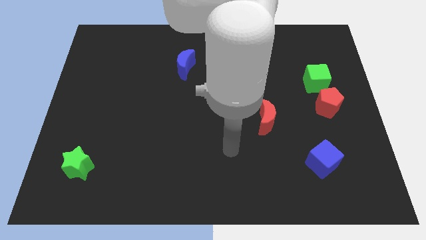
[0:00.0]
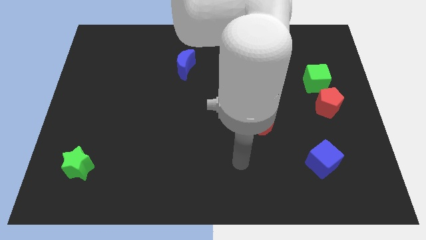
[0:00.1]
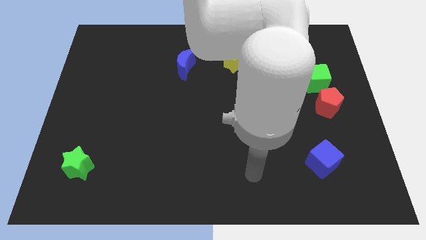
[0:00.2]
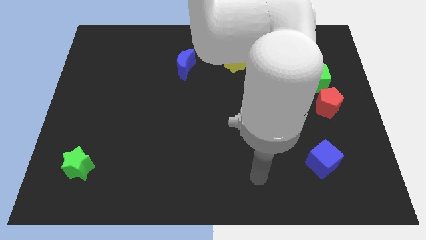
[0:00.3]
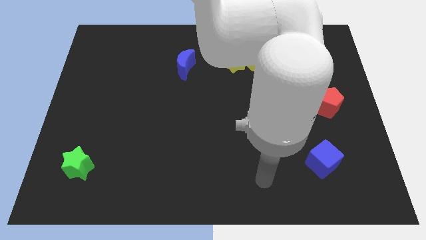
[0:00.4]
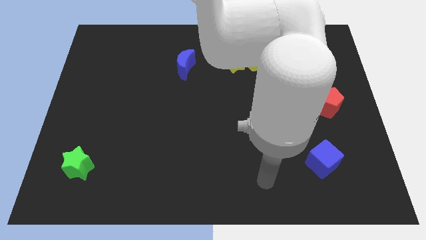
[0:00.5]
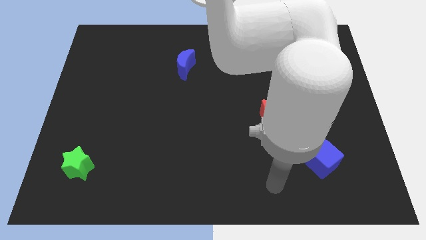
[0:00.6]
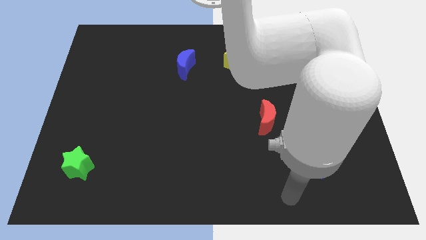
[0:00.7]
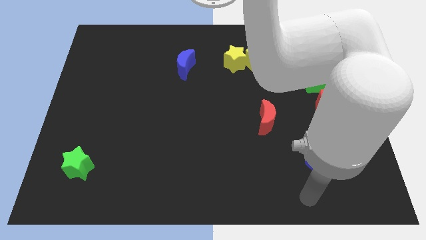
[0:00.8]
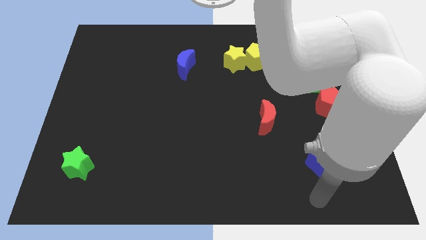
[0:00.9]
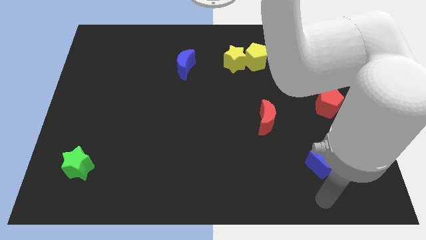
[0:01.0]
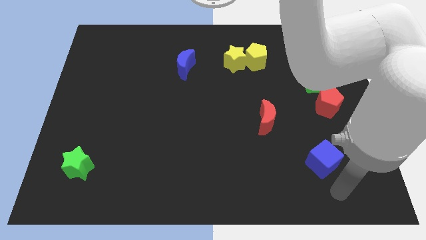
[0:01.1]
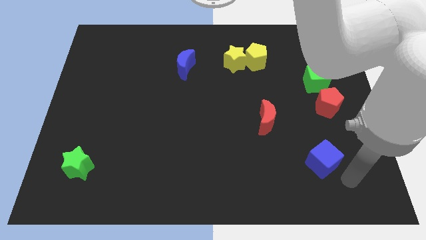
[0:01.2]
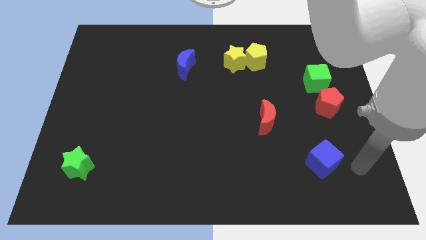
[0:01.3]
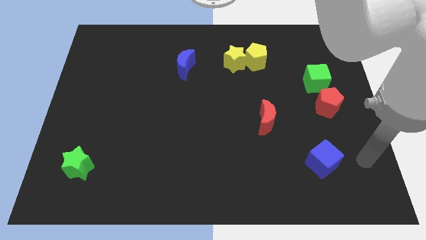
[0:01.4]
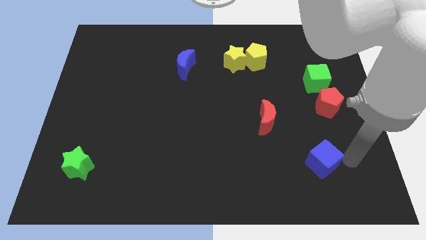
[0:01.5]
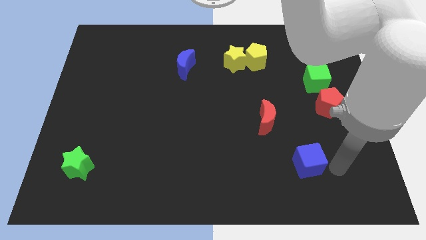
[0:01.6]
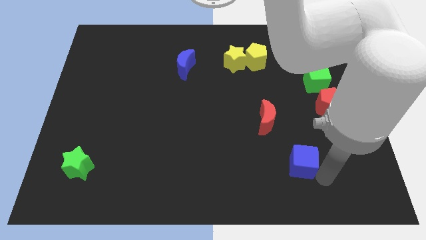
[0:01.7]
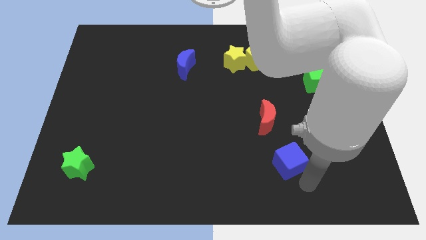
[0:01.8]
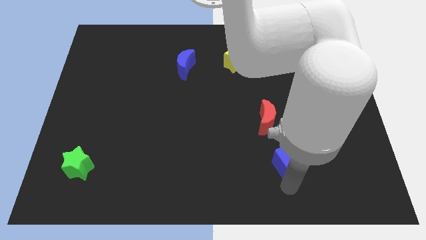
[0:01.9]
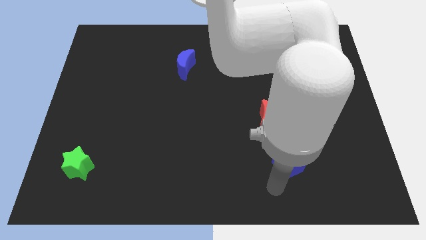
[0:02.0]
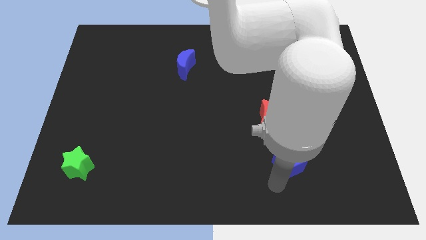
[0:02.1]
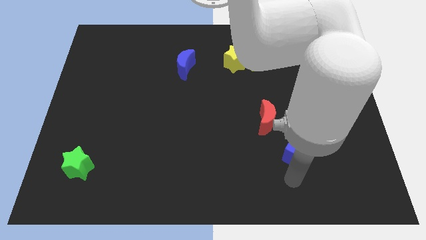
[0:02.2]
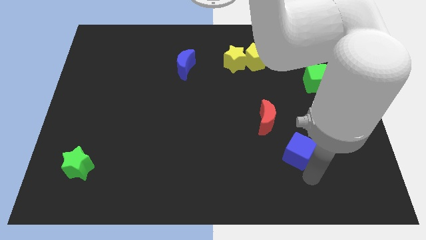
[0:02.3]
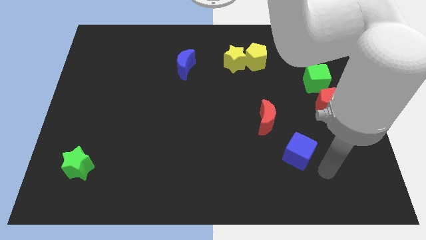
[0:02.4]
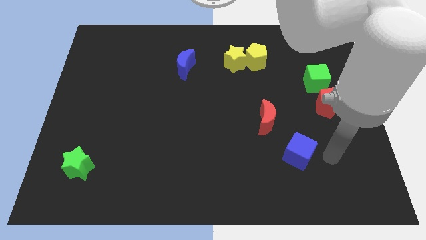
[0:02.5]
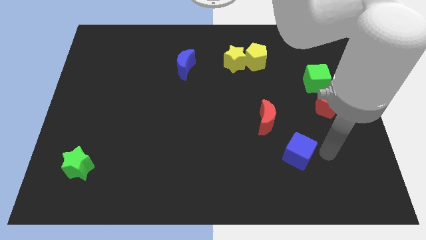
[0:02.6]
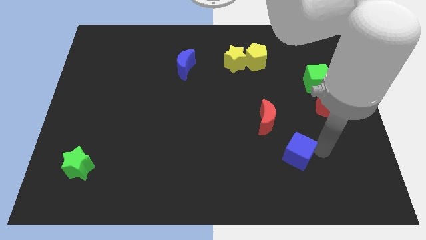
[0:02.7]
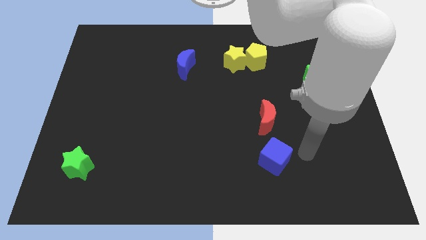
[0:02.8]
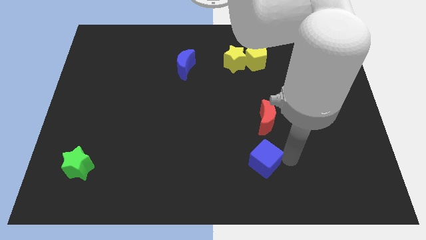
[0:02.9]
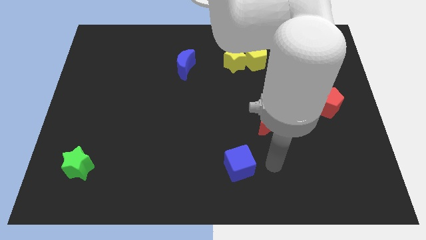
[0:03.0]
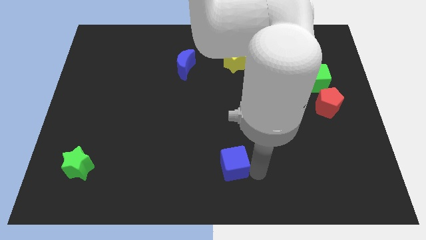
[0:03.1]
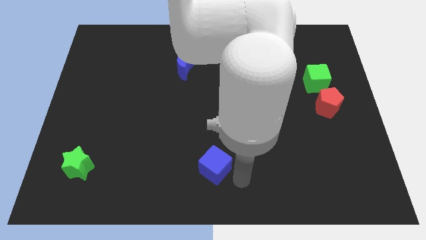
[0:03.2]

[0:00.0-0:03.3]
place the blue cube towards the green star

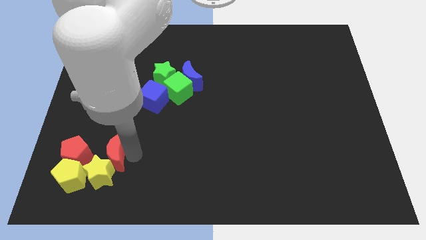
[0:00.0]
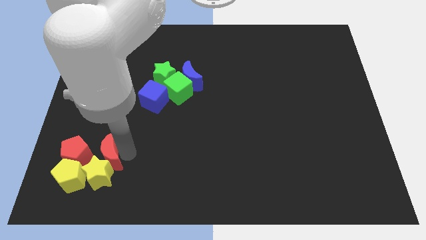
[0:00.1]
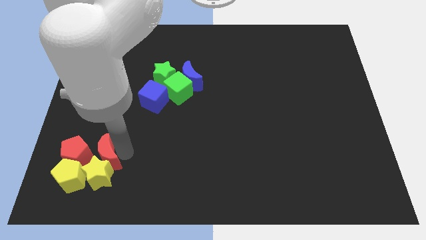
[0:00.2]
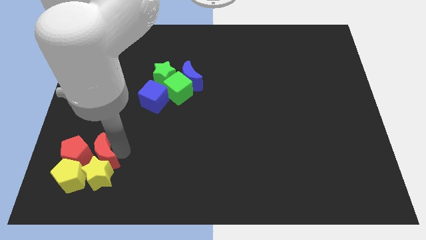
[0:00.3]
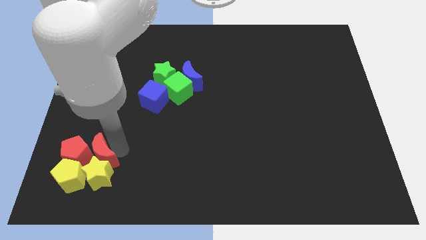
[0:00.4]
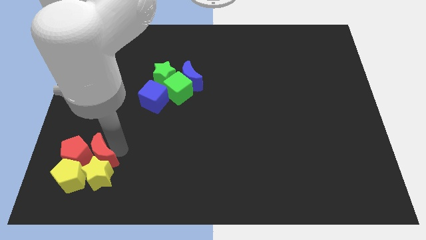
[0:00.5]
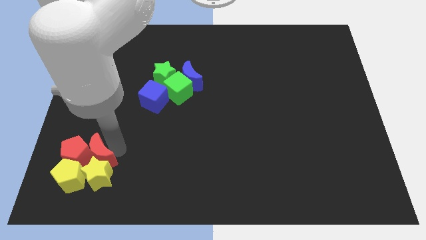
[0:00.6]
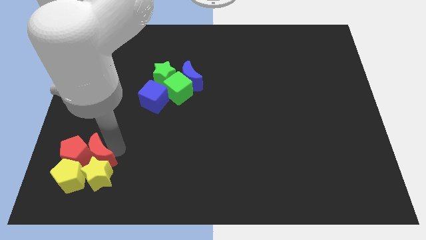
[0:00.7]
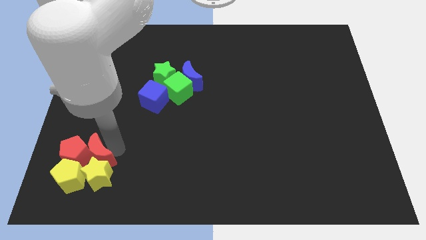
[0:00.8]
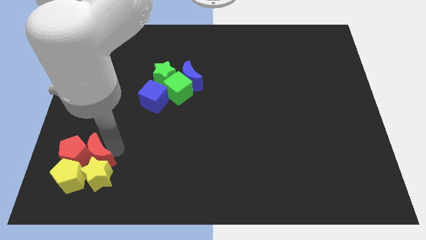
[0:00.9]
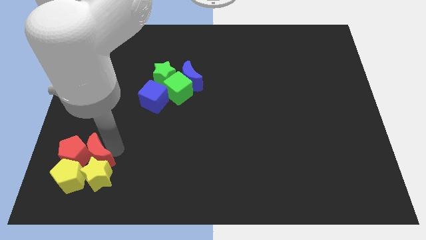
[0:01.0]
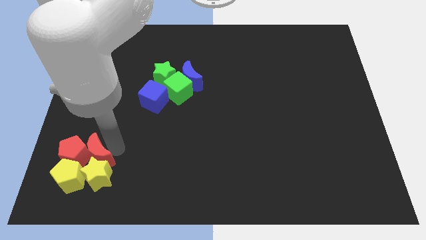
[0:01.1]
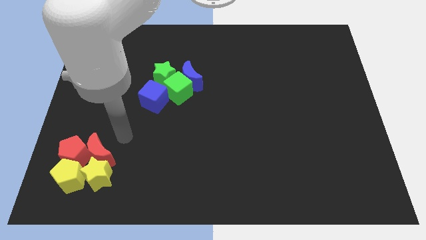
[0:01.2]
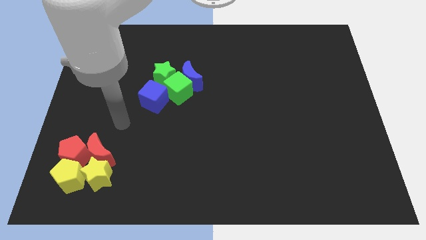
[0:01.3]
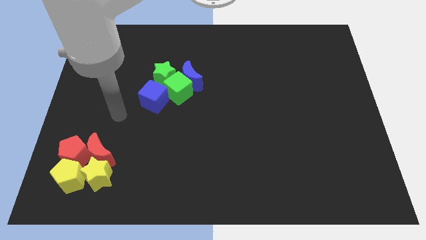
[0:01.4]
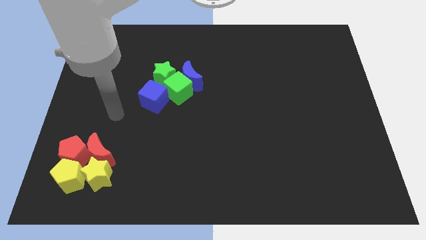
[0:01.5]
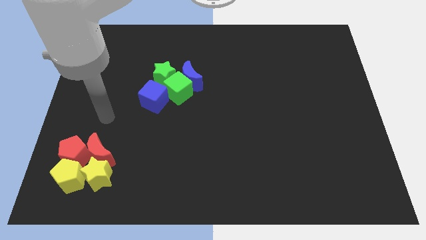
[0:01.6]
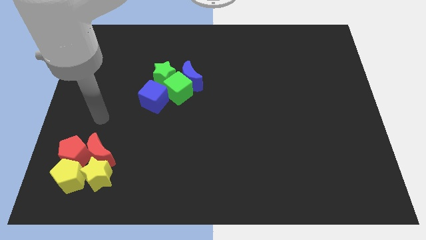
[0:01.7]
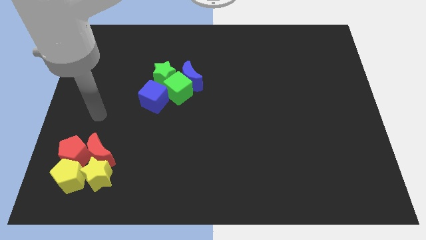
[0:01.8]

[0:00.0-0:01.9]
push the red moon into the red pentagon

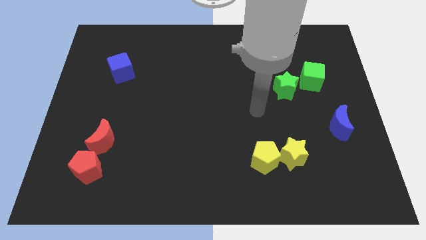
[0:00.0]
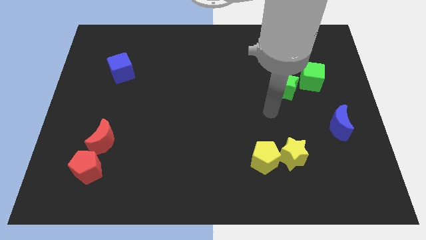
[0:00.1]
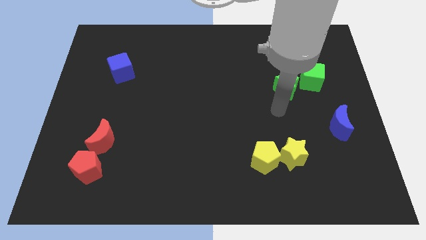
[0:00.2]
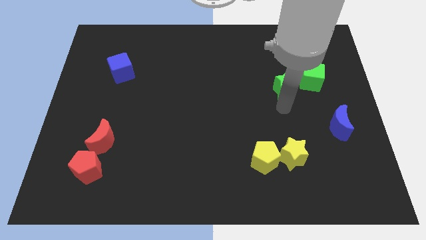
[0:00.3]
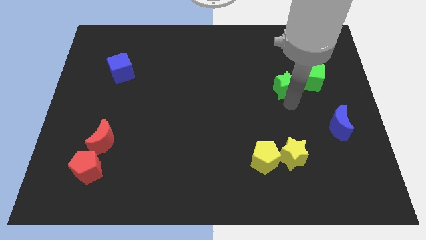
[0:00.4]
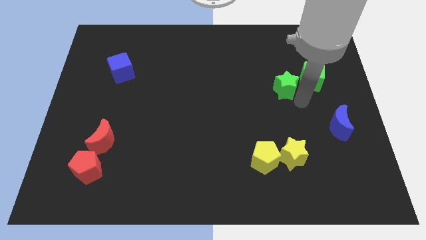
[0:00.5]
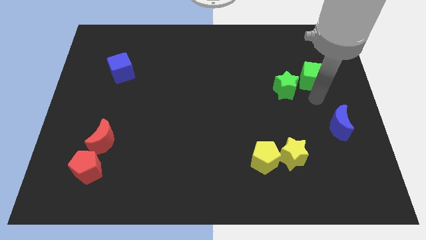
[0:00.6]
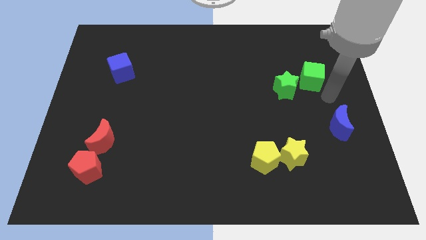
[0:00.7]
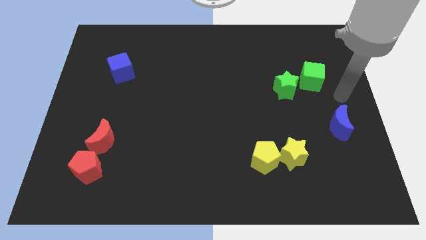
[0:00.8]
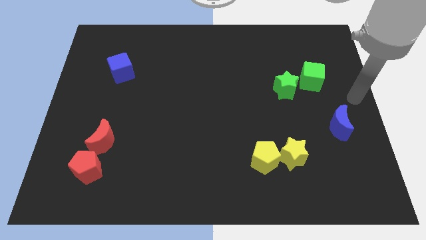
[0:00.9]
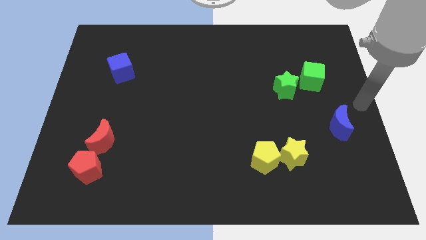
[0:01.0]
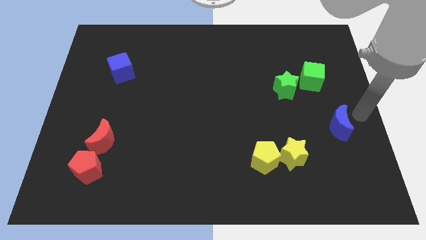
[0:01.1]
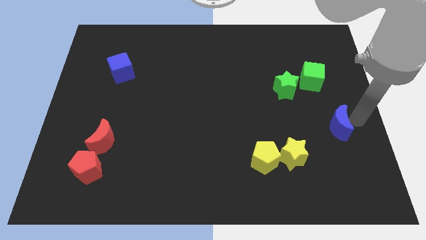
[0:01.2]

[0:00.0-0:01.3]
place your arm to the right of the blue moon

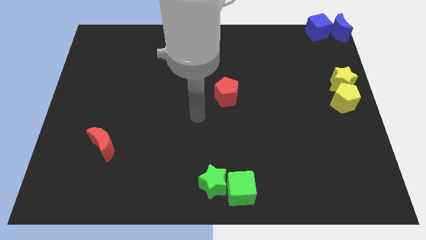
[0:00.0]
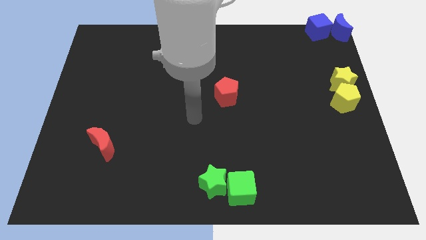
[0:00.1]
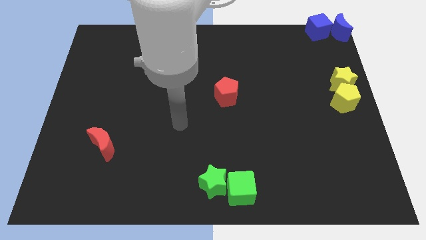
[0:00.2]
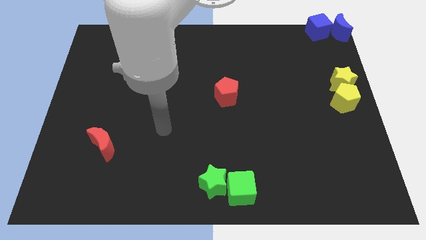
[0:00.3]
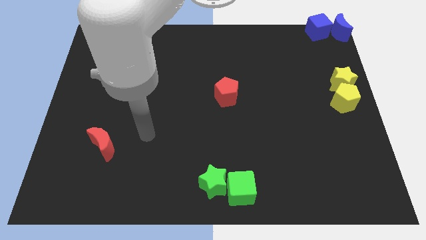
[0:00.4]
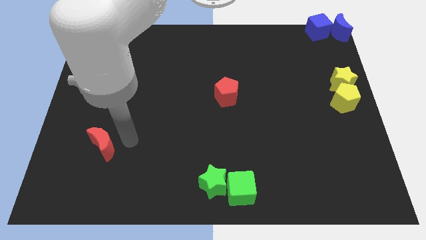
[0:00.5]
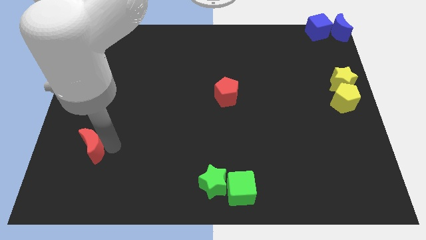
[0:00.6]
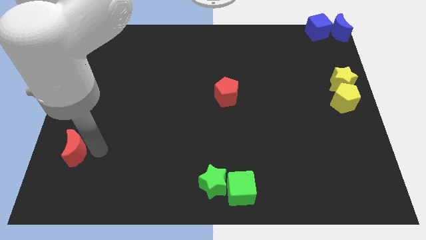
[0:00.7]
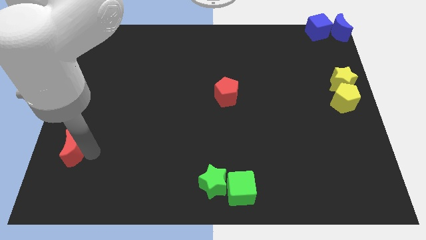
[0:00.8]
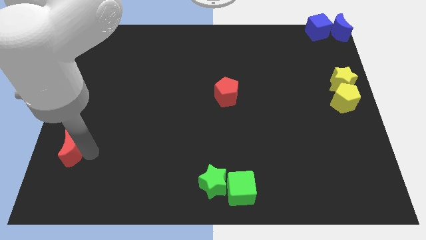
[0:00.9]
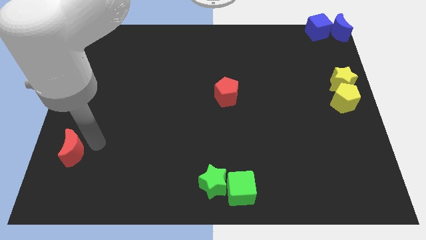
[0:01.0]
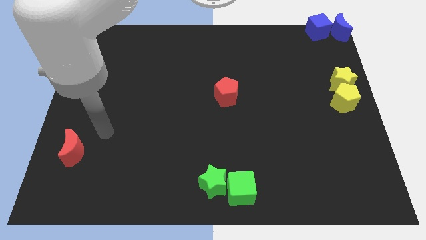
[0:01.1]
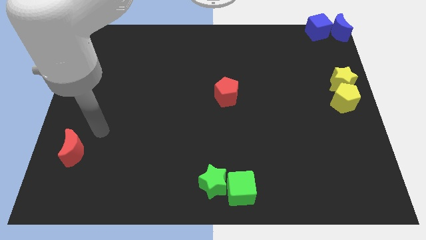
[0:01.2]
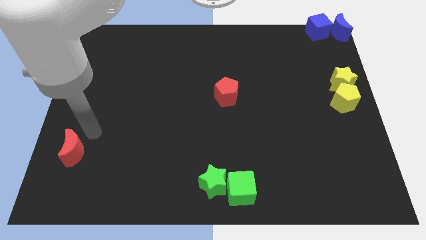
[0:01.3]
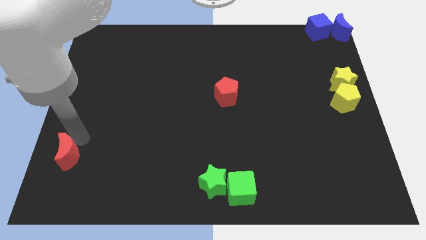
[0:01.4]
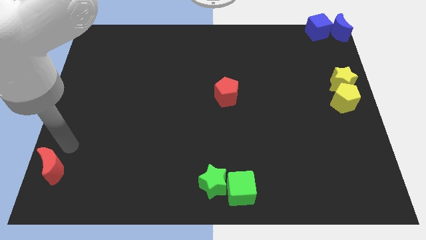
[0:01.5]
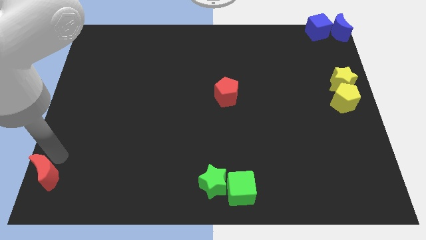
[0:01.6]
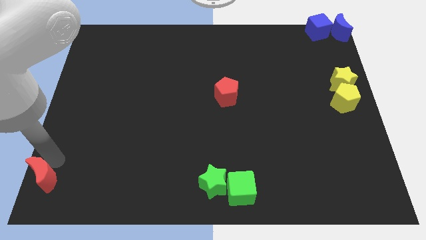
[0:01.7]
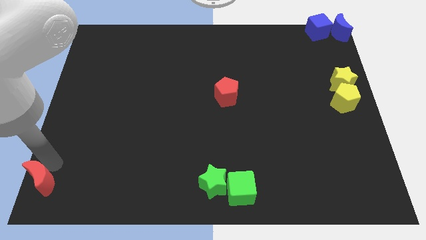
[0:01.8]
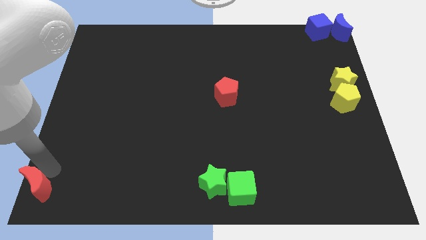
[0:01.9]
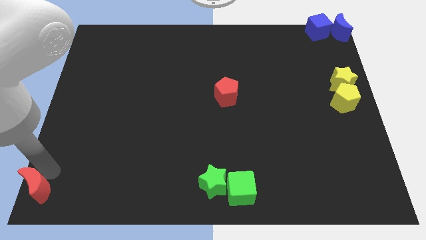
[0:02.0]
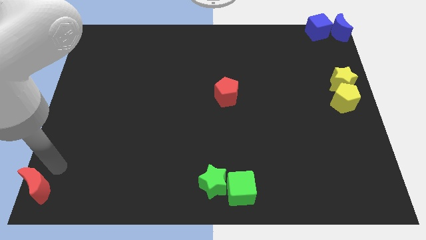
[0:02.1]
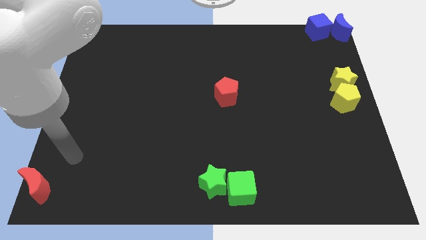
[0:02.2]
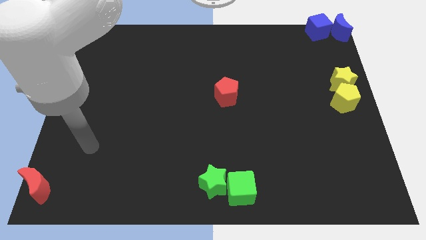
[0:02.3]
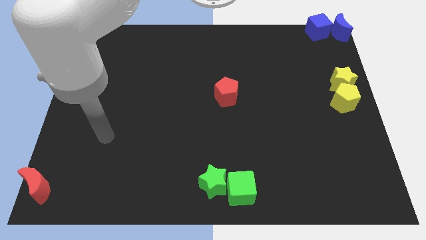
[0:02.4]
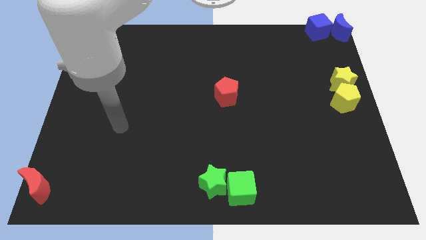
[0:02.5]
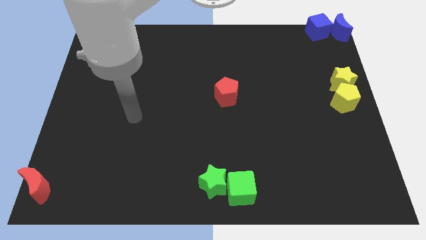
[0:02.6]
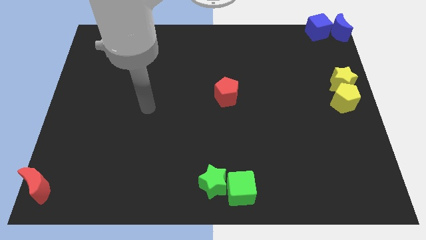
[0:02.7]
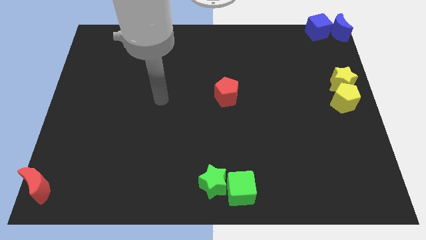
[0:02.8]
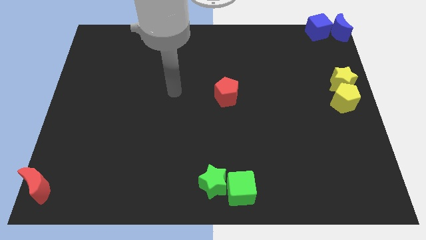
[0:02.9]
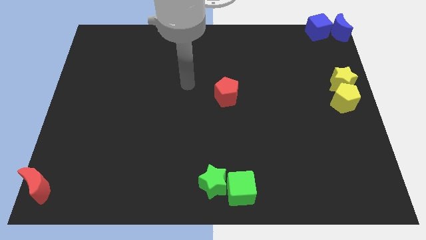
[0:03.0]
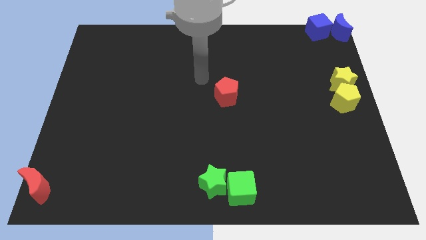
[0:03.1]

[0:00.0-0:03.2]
put the red moon at the bottom left corner of the board
